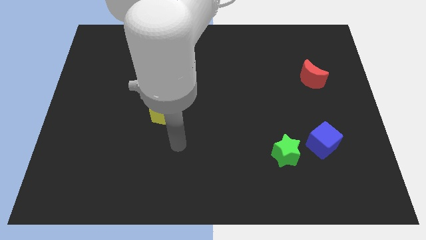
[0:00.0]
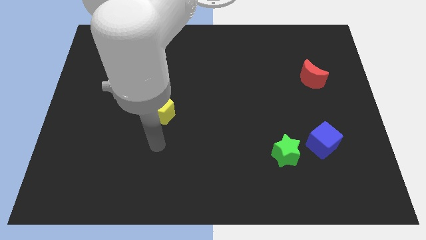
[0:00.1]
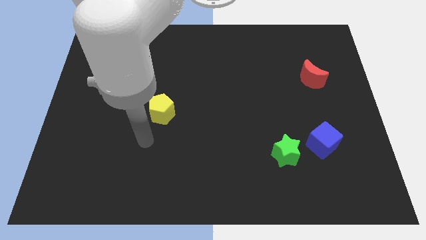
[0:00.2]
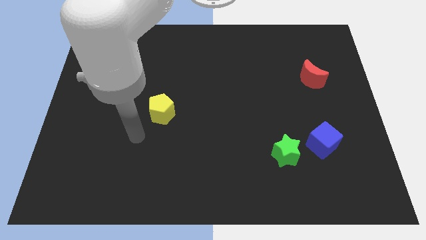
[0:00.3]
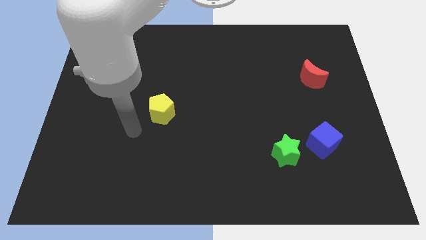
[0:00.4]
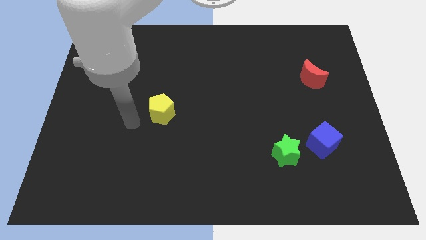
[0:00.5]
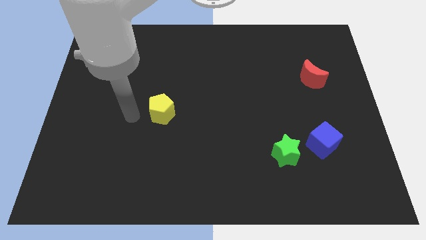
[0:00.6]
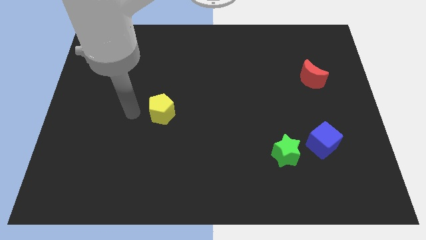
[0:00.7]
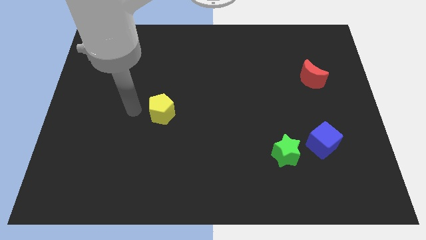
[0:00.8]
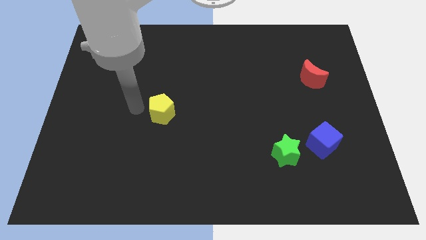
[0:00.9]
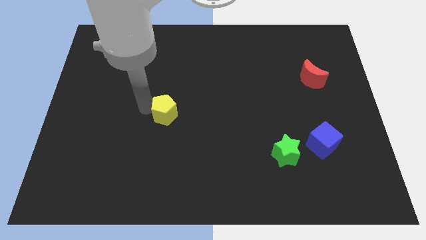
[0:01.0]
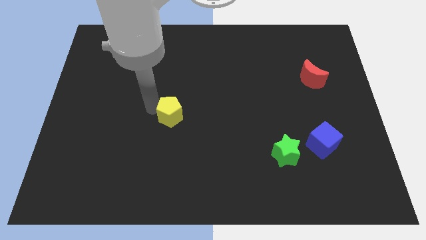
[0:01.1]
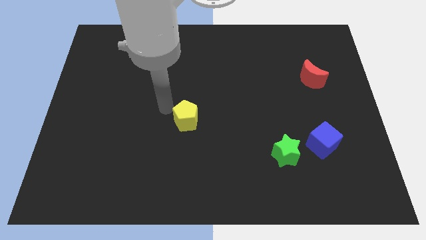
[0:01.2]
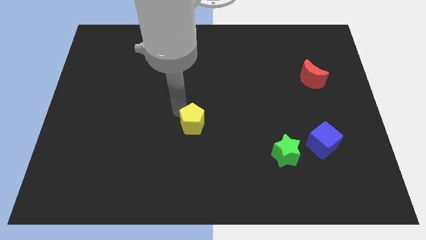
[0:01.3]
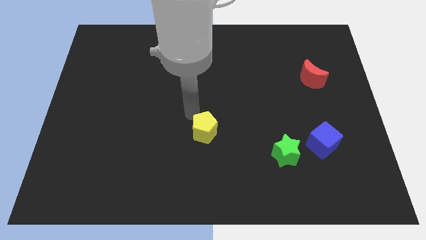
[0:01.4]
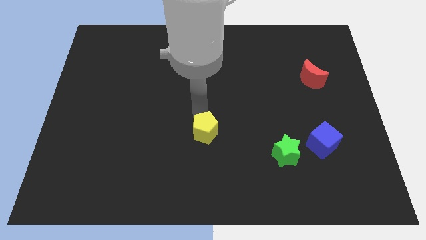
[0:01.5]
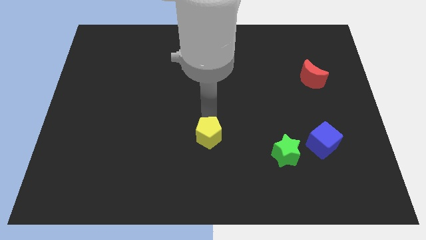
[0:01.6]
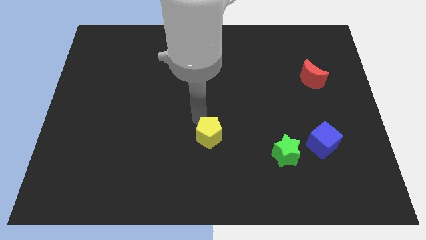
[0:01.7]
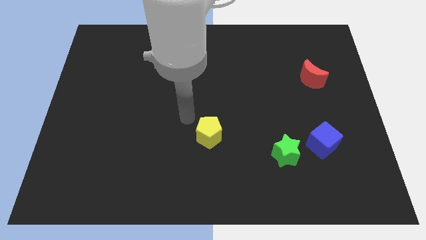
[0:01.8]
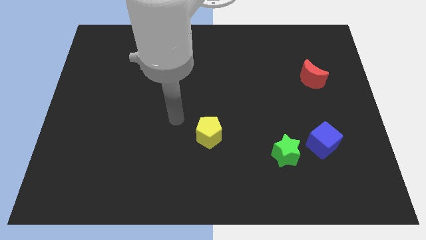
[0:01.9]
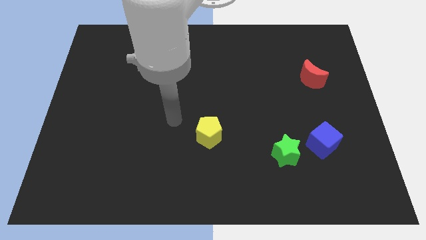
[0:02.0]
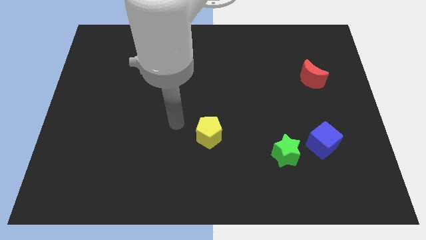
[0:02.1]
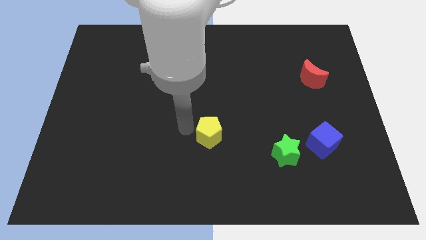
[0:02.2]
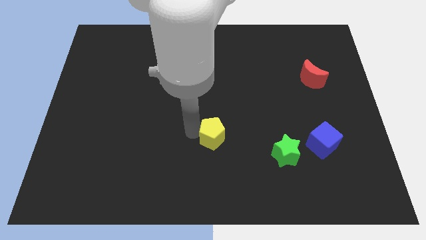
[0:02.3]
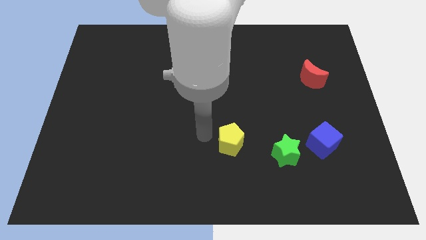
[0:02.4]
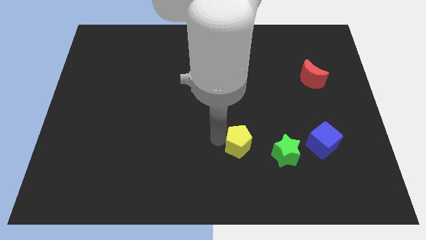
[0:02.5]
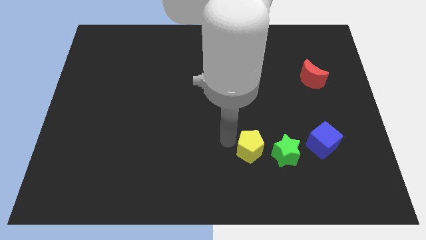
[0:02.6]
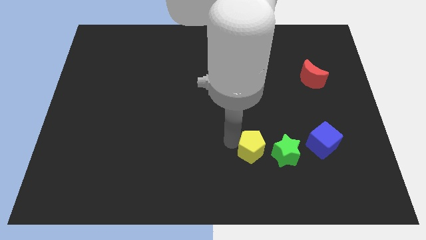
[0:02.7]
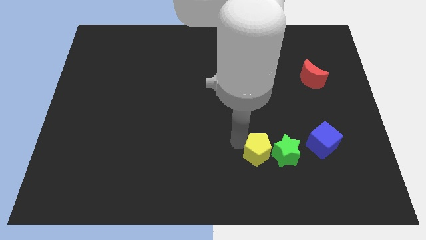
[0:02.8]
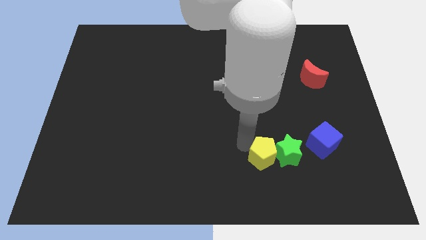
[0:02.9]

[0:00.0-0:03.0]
slide the yellow block towards the star

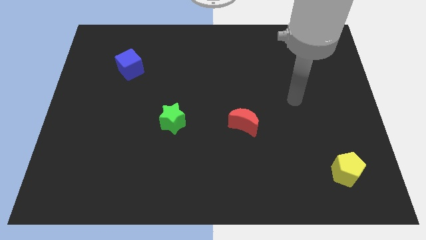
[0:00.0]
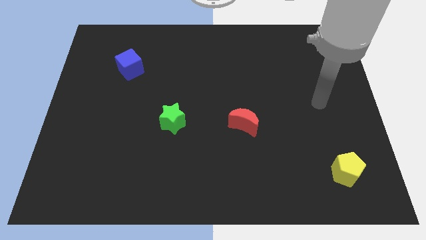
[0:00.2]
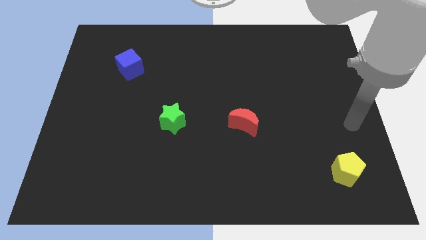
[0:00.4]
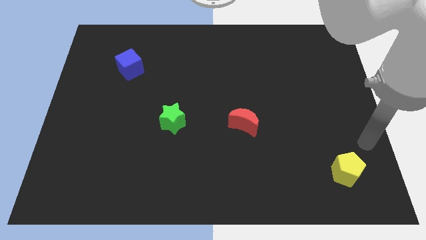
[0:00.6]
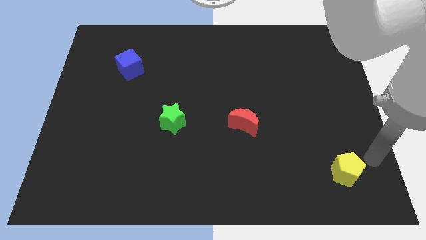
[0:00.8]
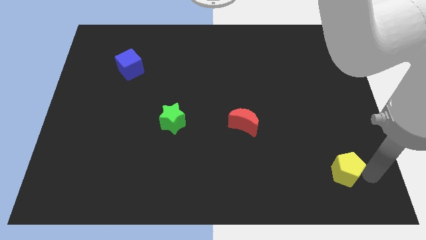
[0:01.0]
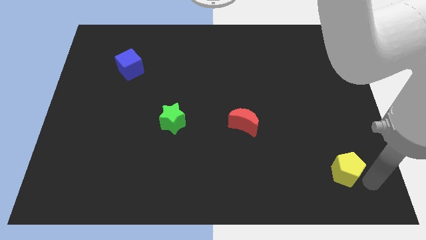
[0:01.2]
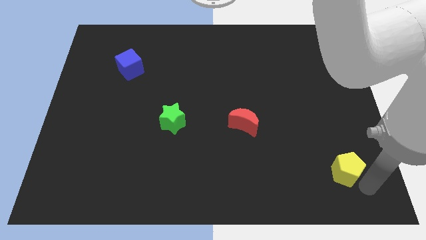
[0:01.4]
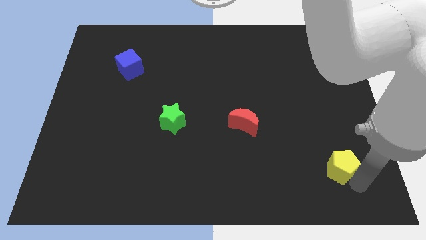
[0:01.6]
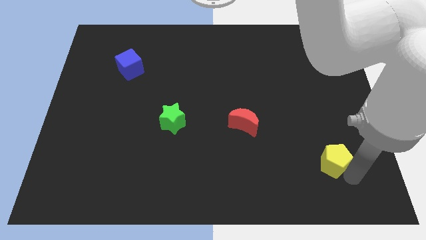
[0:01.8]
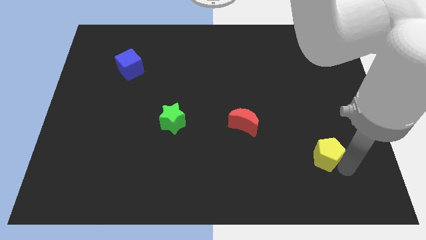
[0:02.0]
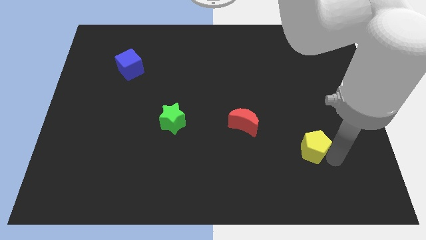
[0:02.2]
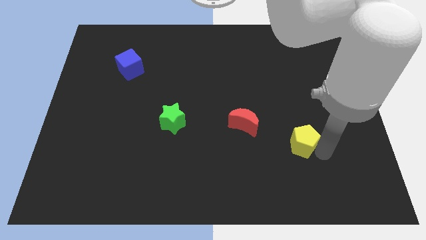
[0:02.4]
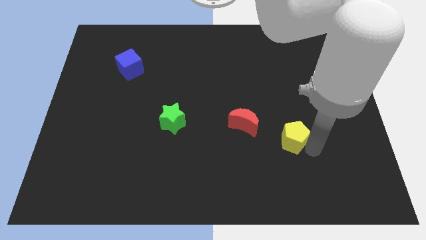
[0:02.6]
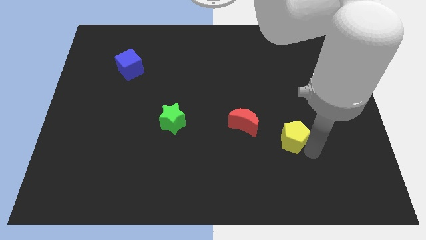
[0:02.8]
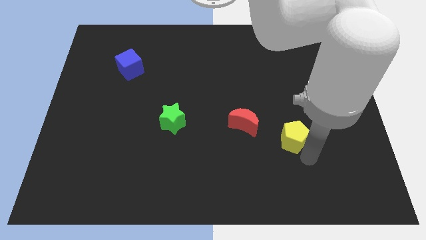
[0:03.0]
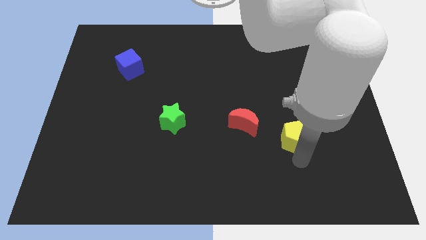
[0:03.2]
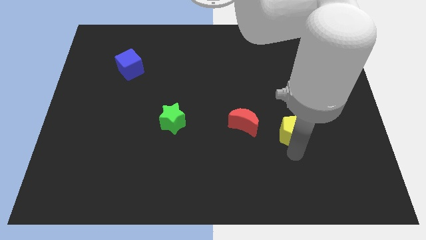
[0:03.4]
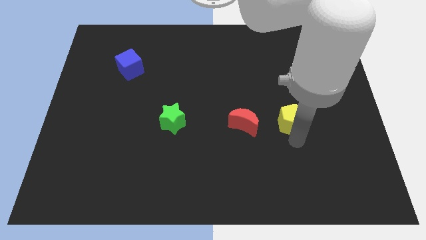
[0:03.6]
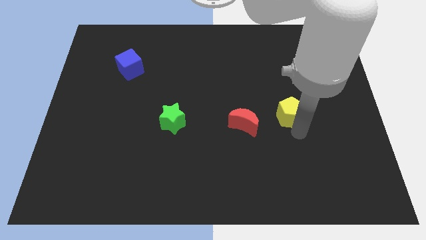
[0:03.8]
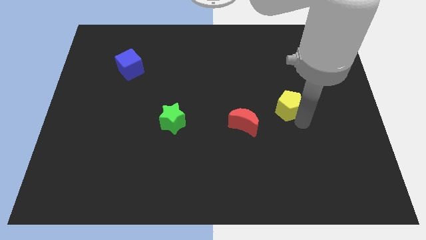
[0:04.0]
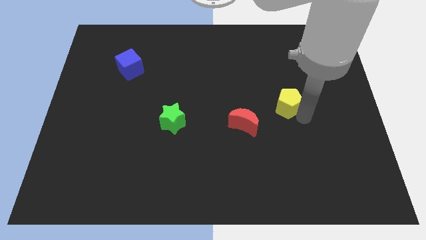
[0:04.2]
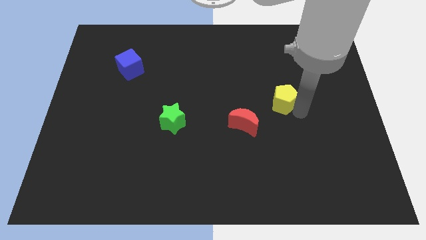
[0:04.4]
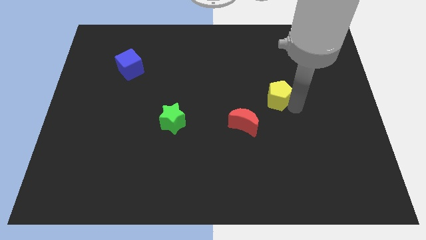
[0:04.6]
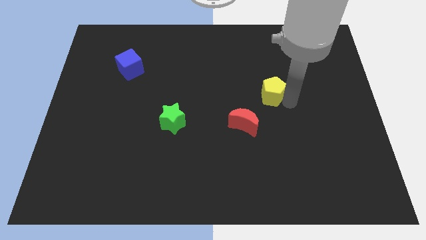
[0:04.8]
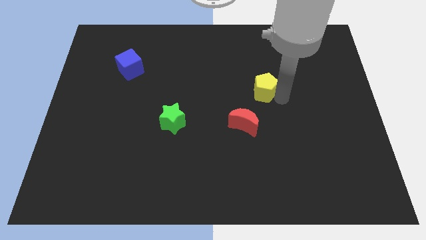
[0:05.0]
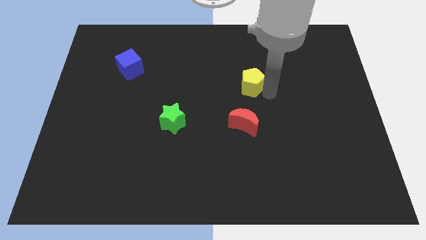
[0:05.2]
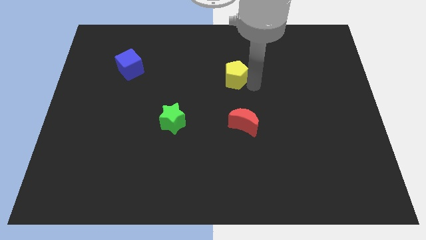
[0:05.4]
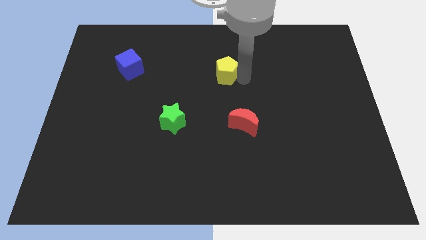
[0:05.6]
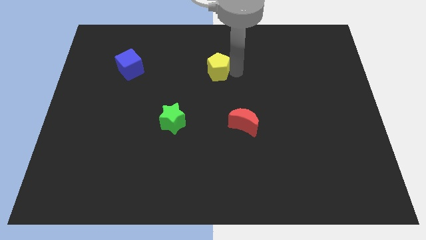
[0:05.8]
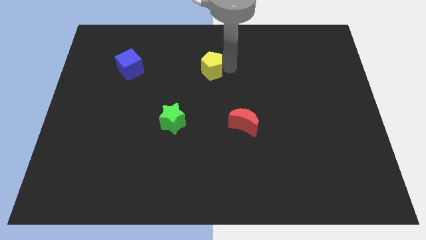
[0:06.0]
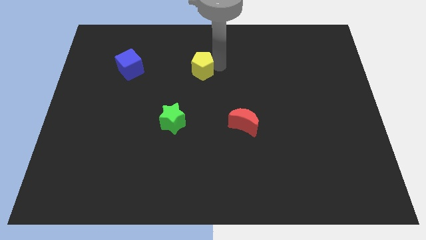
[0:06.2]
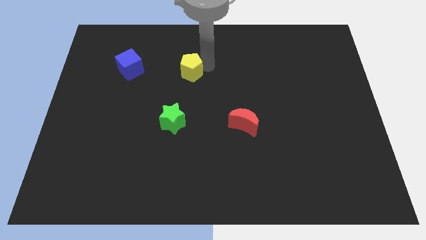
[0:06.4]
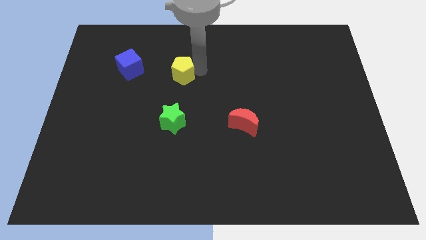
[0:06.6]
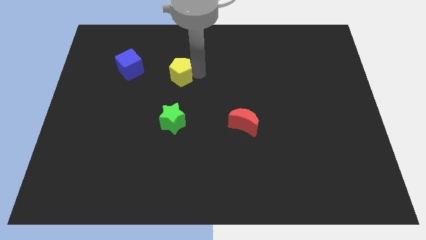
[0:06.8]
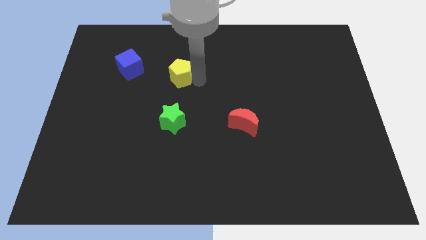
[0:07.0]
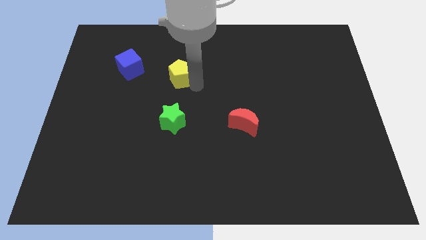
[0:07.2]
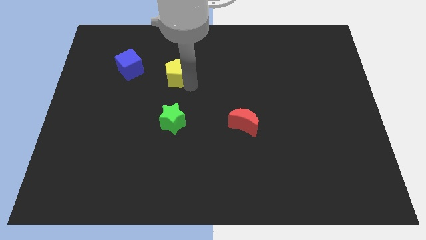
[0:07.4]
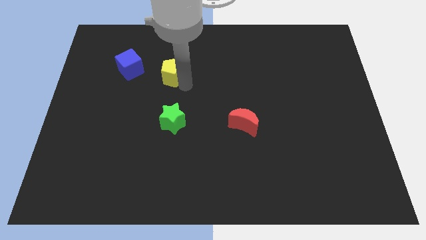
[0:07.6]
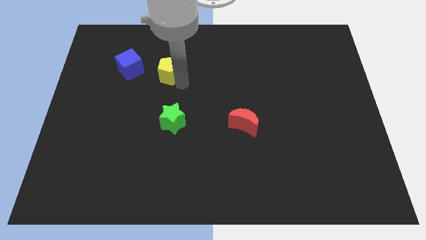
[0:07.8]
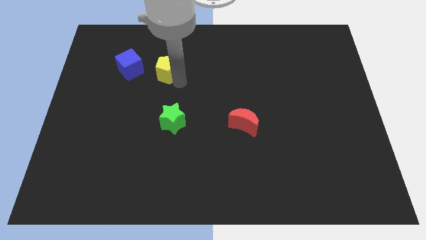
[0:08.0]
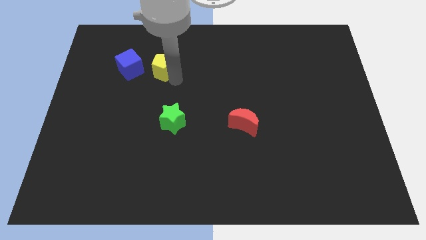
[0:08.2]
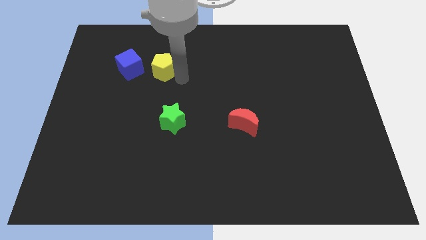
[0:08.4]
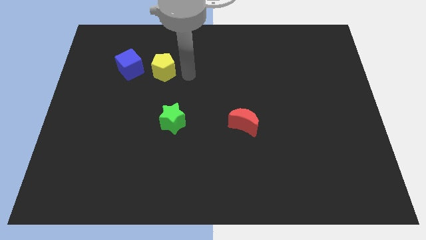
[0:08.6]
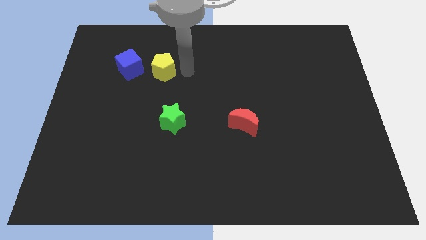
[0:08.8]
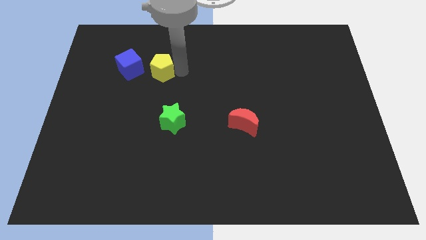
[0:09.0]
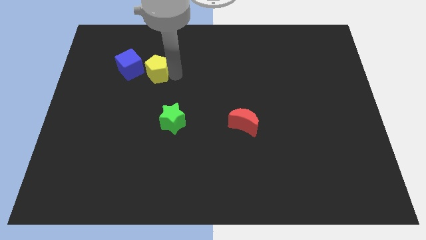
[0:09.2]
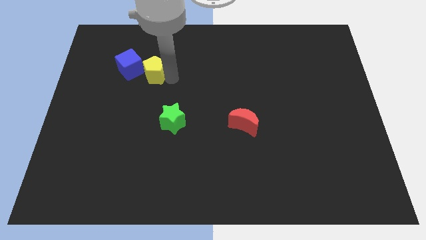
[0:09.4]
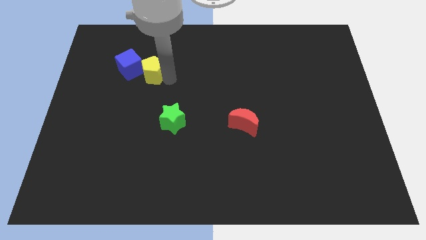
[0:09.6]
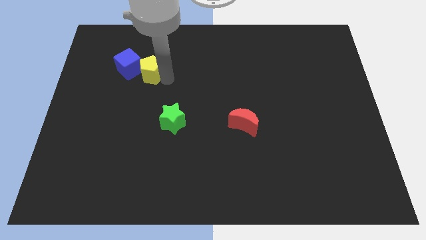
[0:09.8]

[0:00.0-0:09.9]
put the pentagon to the cube

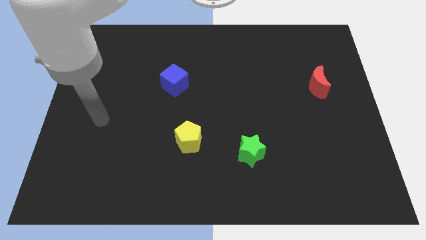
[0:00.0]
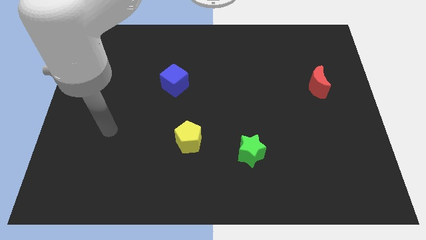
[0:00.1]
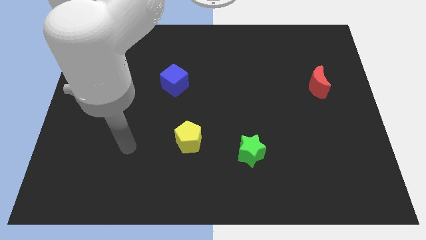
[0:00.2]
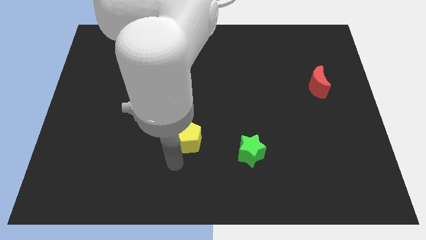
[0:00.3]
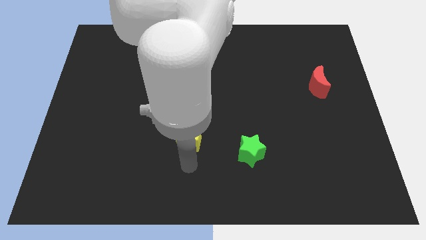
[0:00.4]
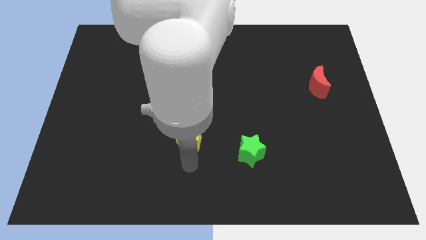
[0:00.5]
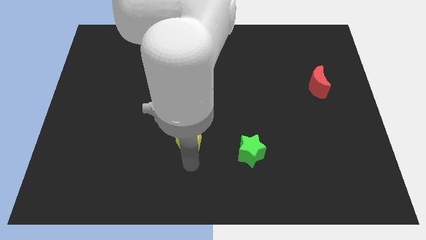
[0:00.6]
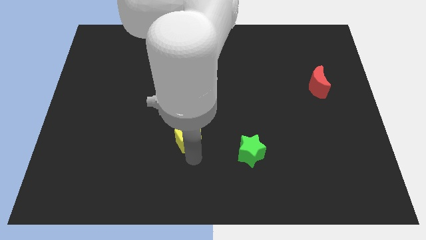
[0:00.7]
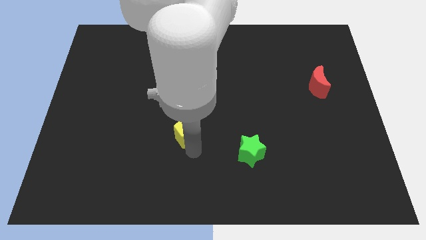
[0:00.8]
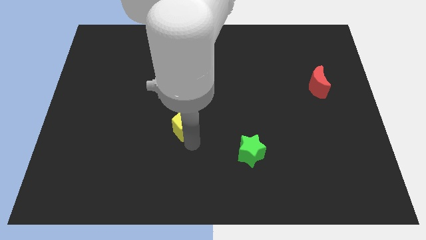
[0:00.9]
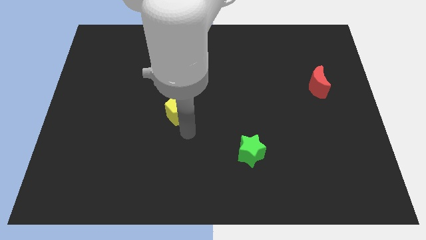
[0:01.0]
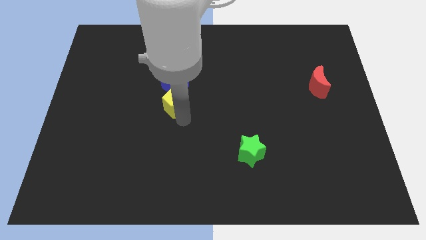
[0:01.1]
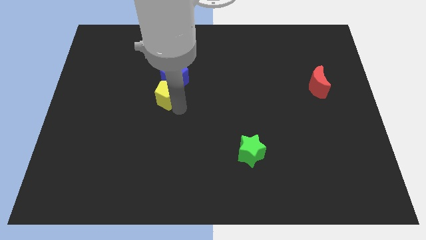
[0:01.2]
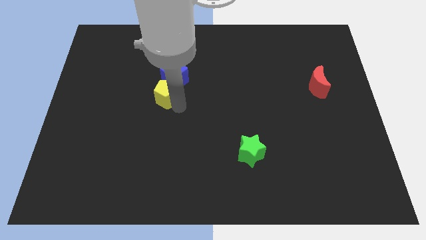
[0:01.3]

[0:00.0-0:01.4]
push the yellow block to the cube
